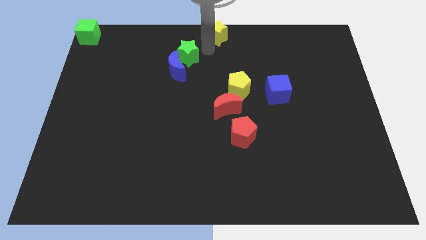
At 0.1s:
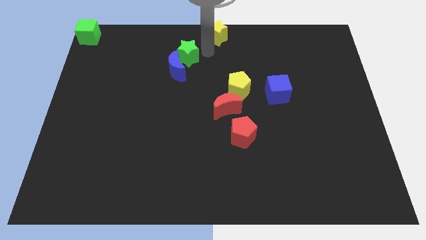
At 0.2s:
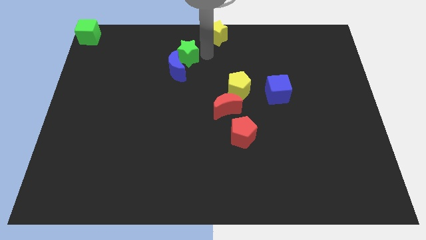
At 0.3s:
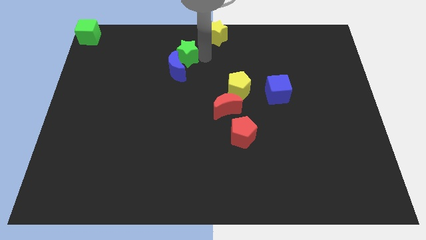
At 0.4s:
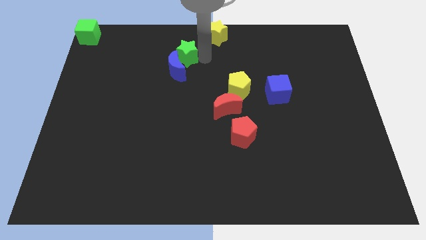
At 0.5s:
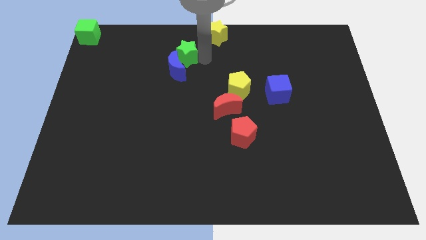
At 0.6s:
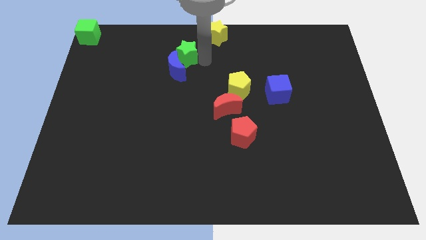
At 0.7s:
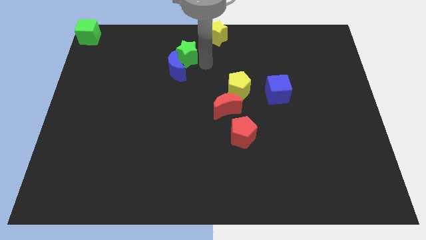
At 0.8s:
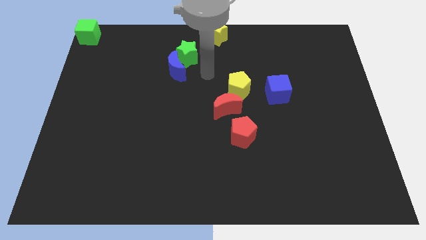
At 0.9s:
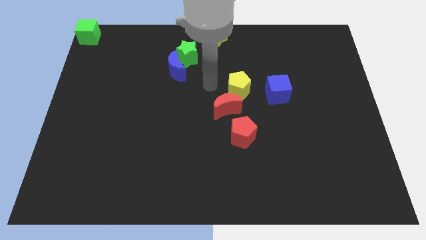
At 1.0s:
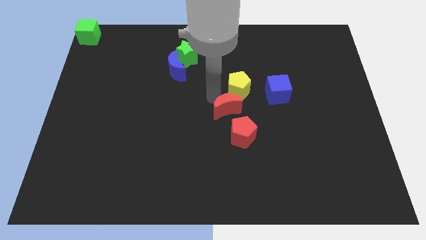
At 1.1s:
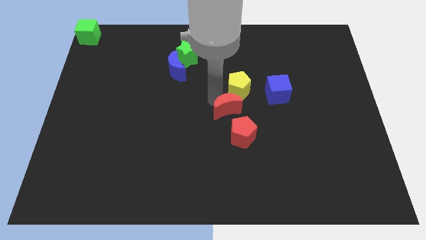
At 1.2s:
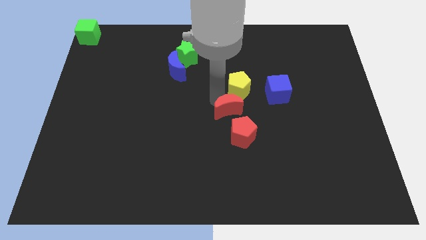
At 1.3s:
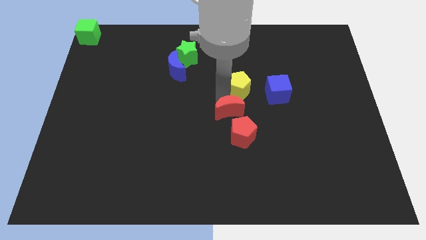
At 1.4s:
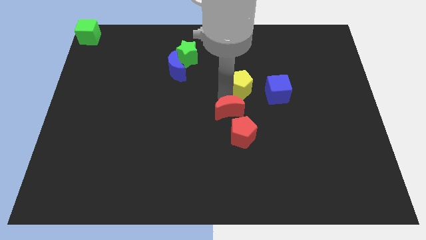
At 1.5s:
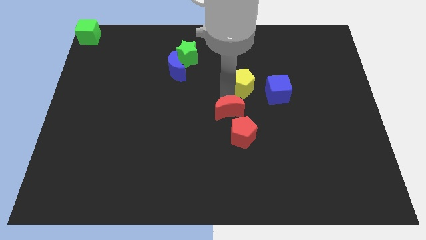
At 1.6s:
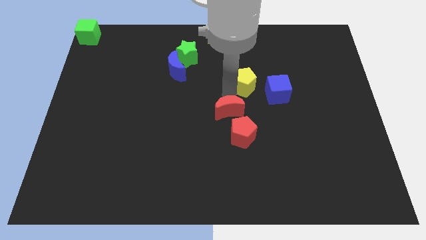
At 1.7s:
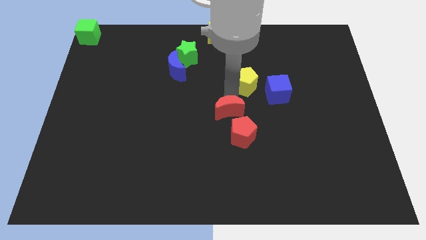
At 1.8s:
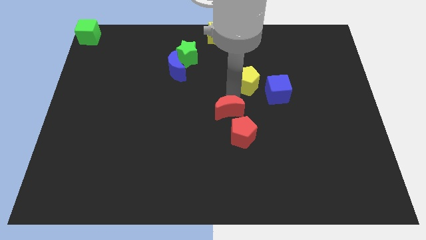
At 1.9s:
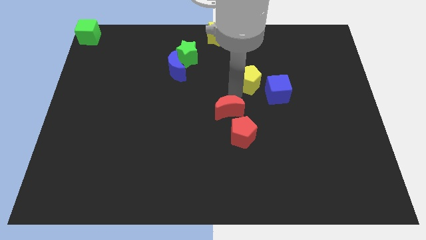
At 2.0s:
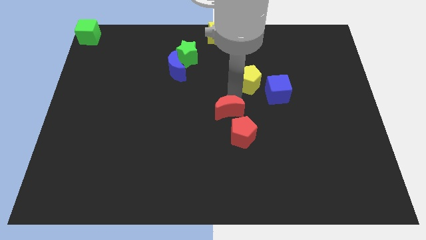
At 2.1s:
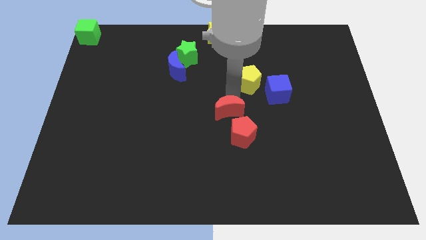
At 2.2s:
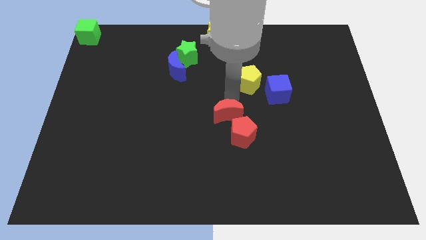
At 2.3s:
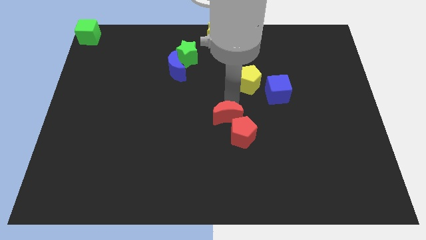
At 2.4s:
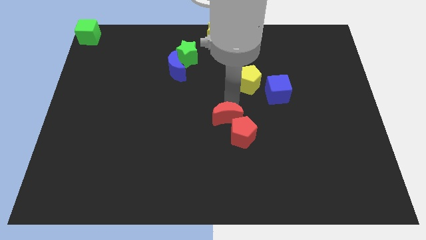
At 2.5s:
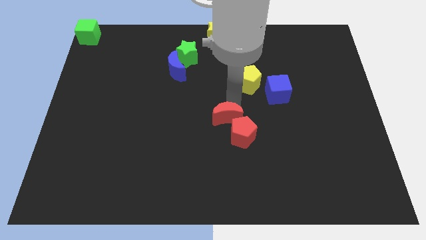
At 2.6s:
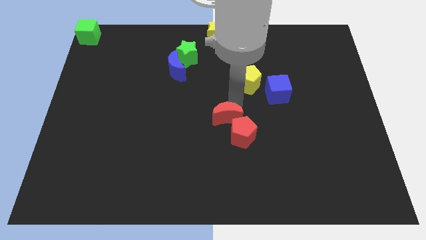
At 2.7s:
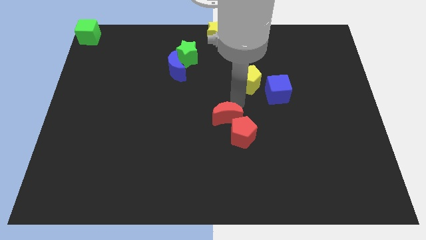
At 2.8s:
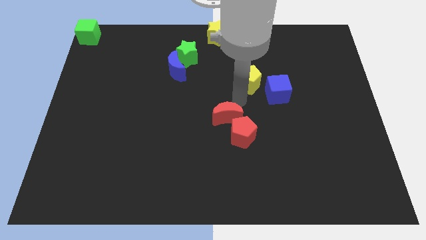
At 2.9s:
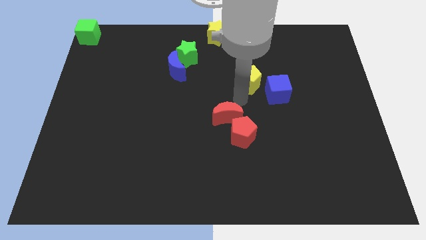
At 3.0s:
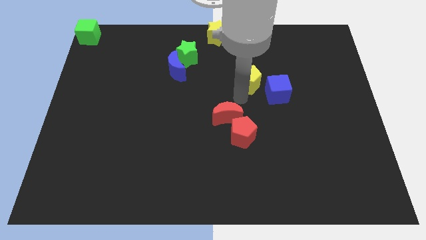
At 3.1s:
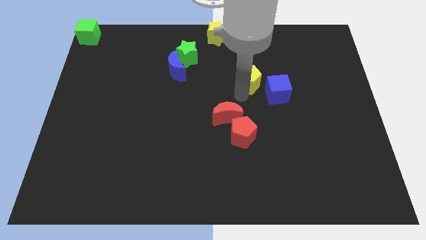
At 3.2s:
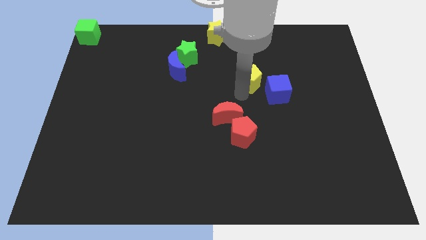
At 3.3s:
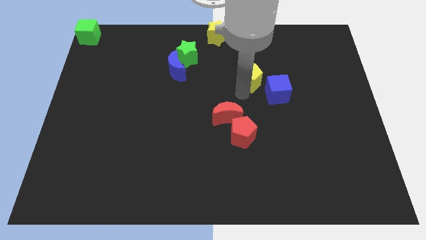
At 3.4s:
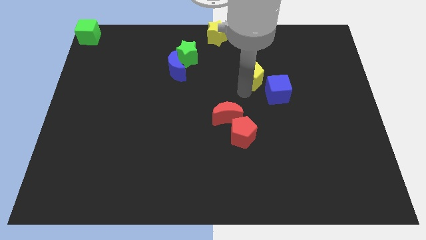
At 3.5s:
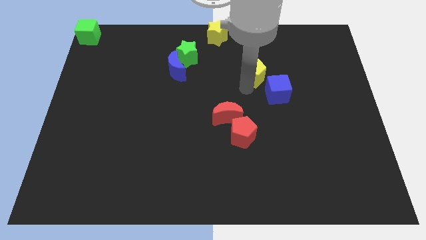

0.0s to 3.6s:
separate yellow pentagon from red moon

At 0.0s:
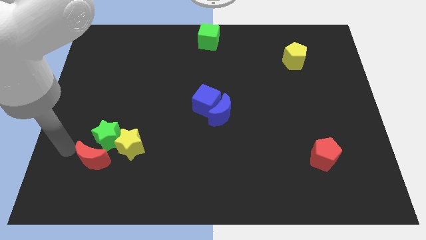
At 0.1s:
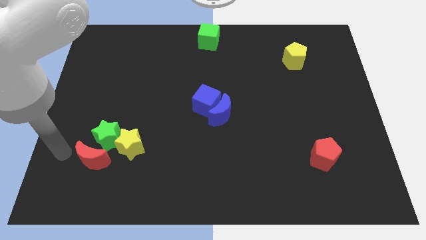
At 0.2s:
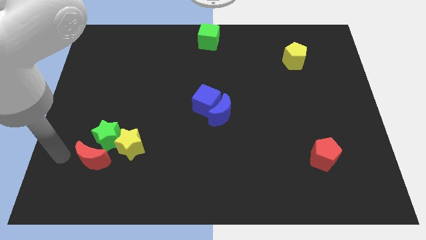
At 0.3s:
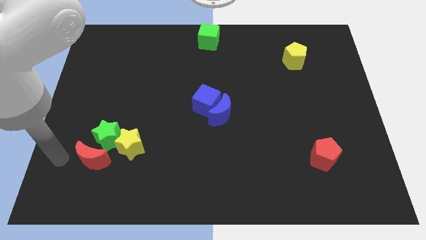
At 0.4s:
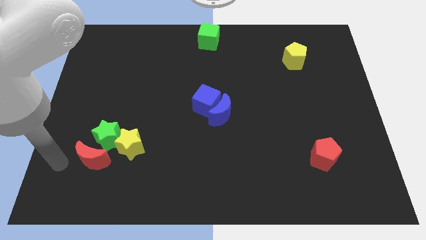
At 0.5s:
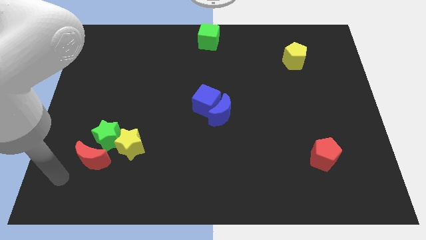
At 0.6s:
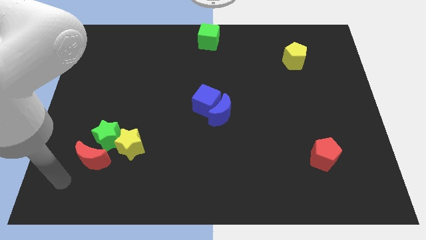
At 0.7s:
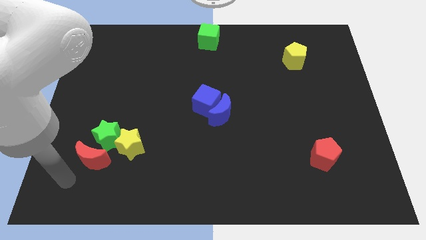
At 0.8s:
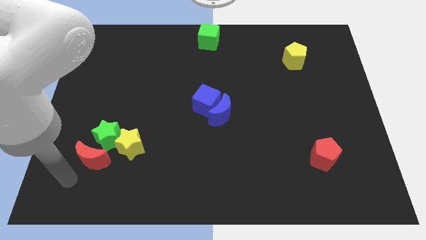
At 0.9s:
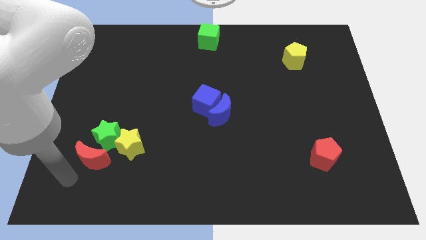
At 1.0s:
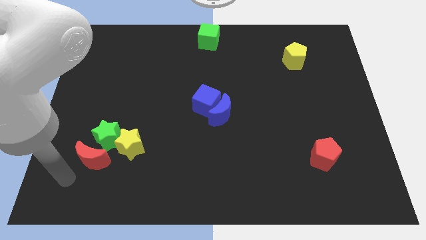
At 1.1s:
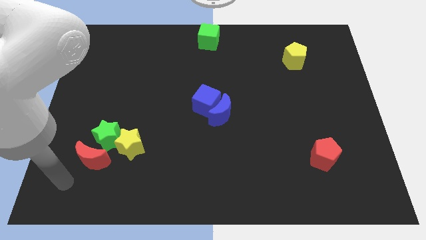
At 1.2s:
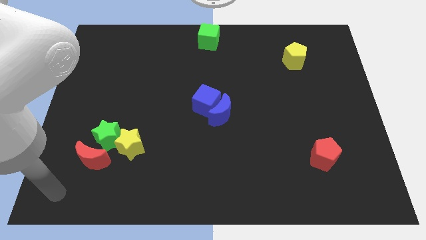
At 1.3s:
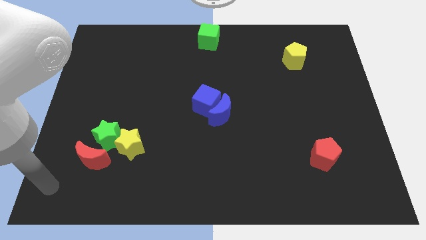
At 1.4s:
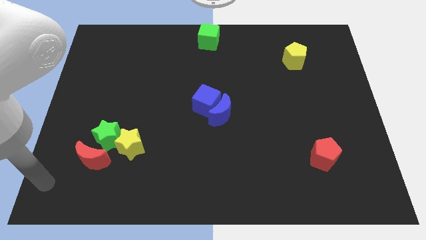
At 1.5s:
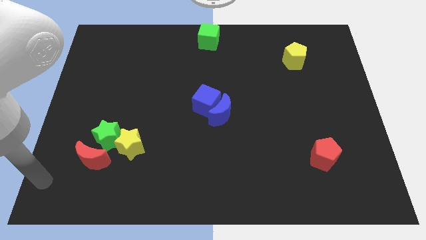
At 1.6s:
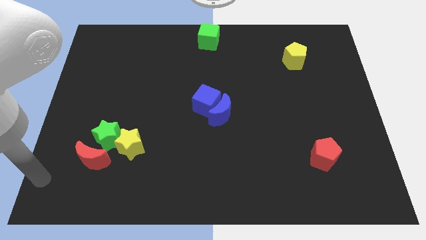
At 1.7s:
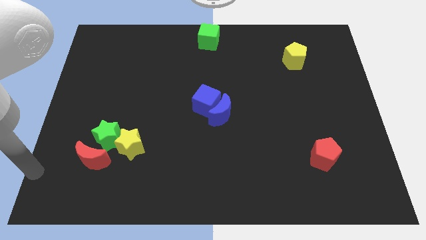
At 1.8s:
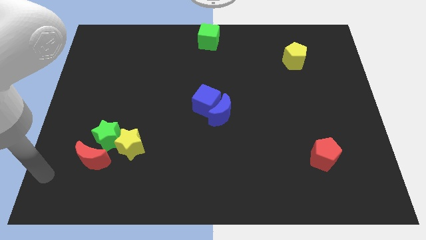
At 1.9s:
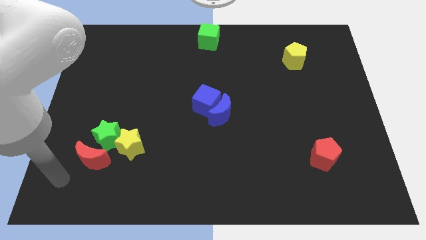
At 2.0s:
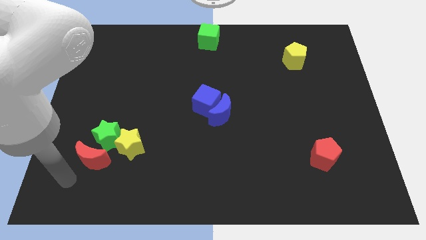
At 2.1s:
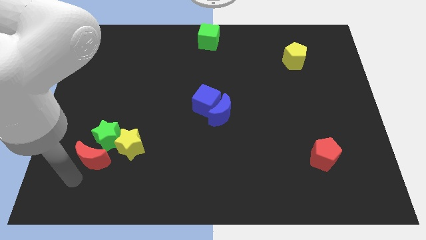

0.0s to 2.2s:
drag the arm towards red crescent

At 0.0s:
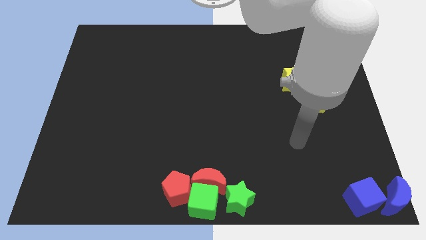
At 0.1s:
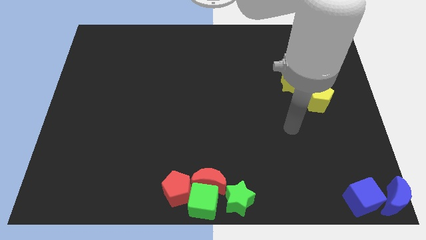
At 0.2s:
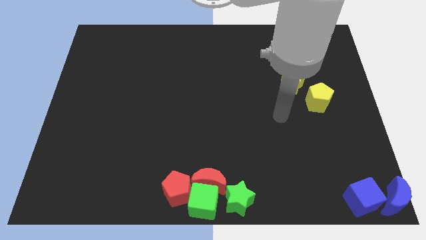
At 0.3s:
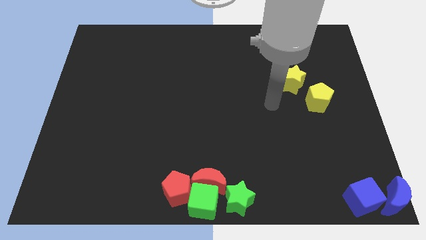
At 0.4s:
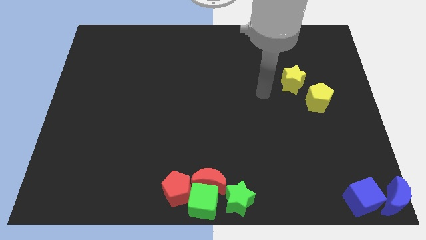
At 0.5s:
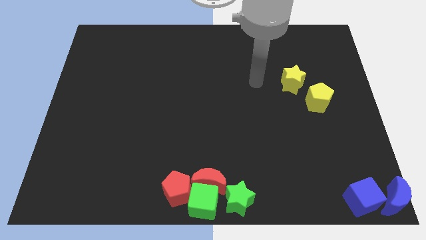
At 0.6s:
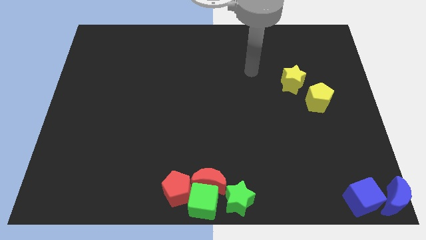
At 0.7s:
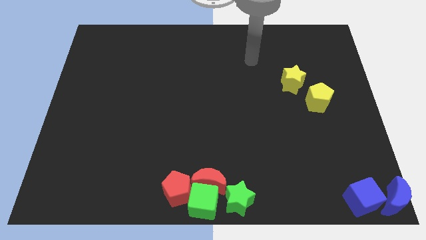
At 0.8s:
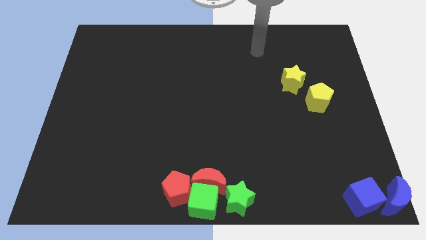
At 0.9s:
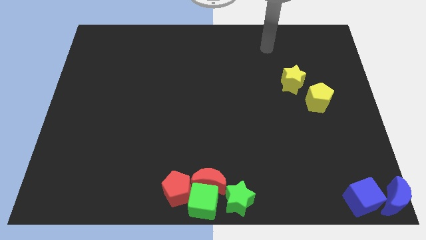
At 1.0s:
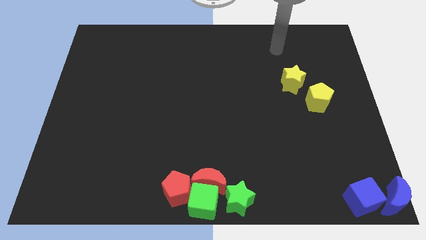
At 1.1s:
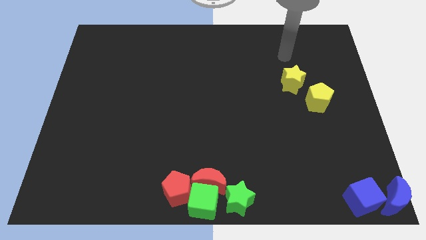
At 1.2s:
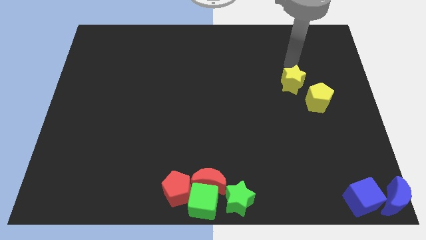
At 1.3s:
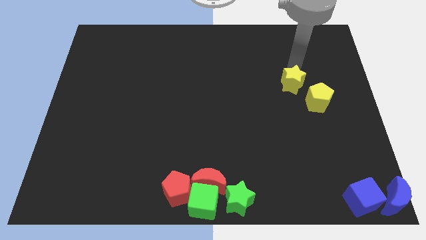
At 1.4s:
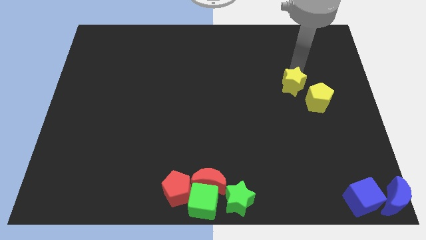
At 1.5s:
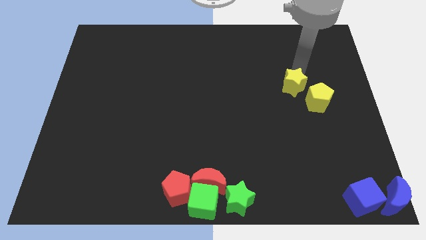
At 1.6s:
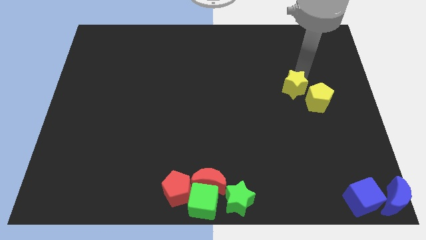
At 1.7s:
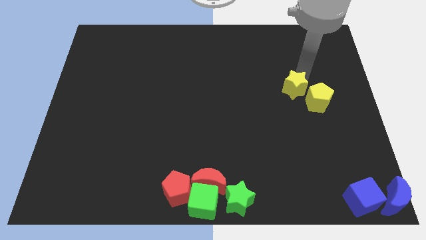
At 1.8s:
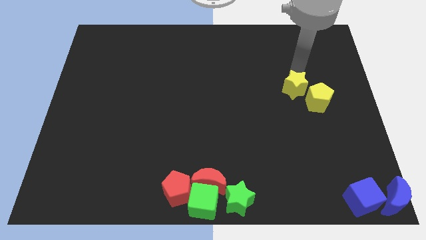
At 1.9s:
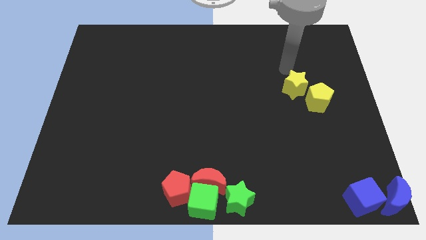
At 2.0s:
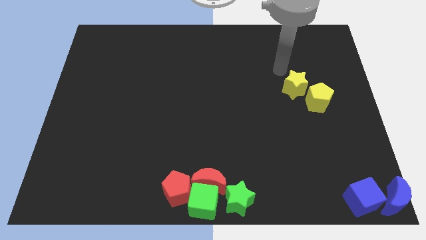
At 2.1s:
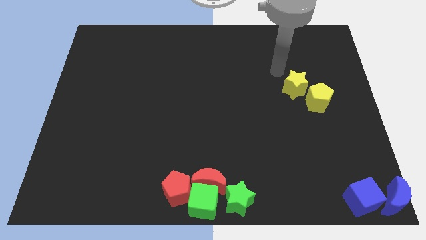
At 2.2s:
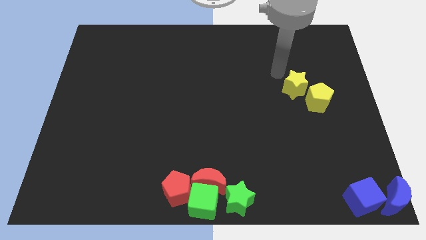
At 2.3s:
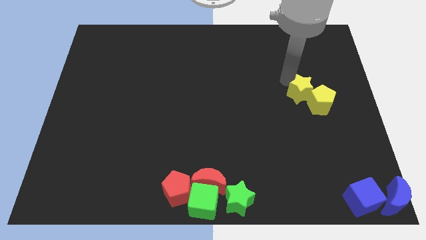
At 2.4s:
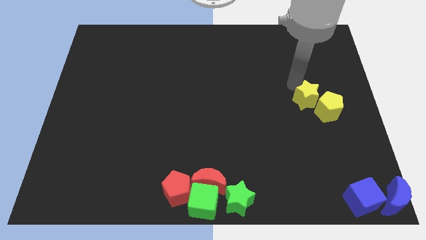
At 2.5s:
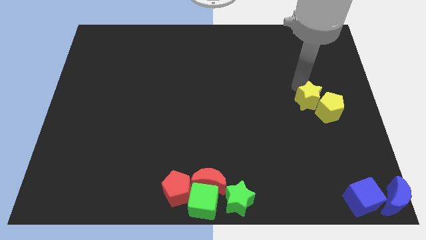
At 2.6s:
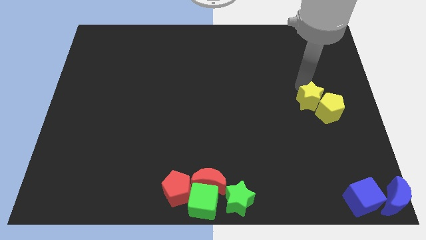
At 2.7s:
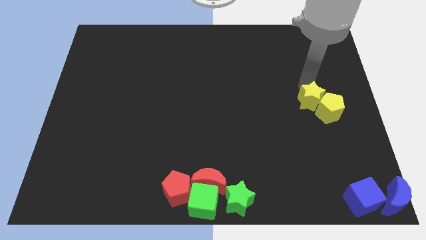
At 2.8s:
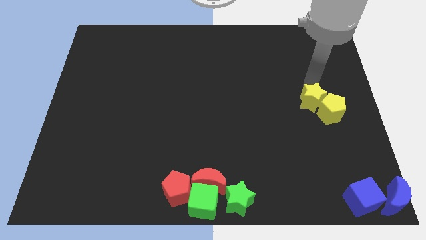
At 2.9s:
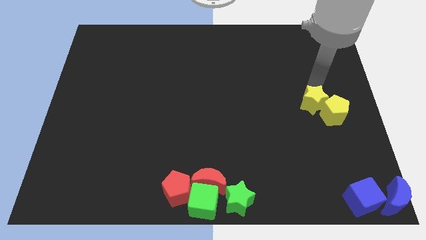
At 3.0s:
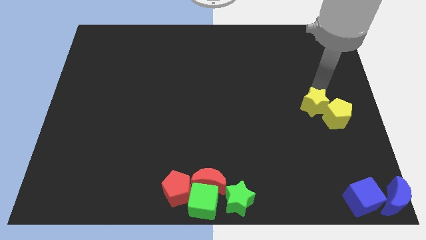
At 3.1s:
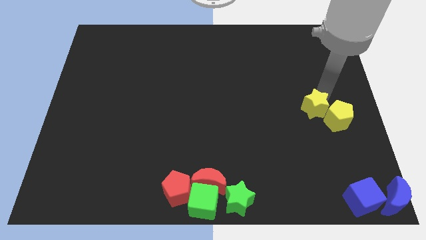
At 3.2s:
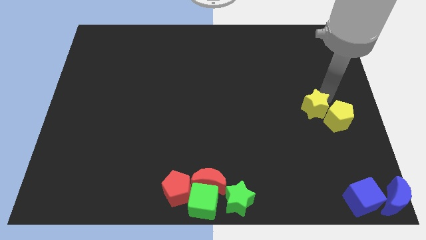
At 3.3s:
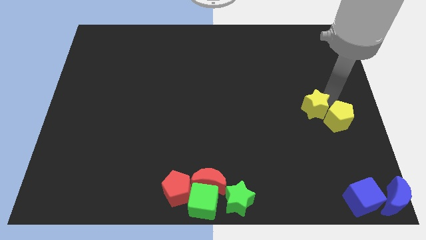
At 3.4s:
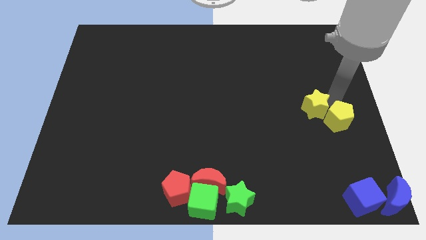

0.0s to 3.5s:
place the yellow blocks slightly down
